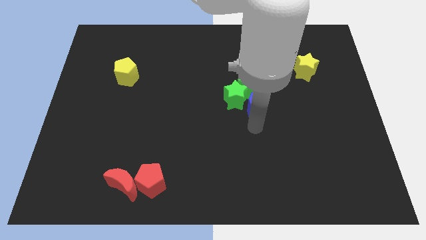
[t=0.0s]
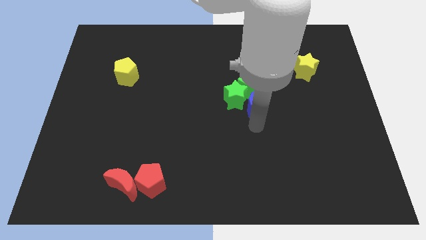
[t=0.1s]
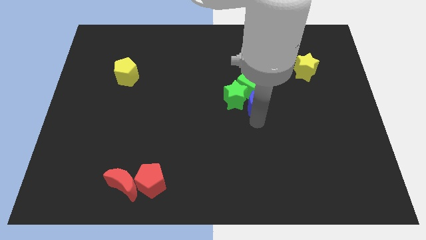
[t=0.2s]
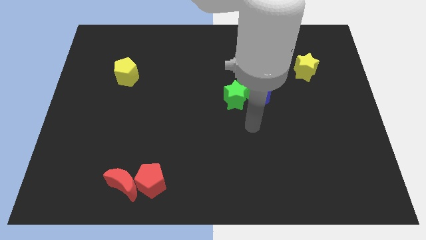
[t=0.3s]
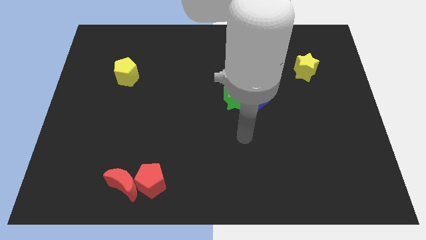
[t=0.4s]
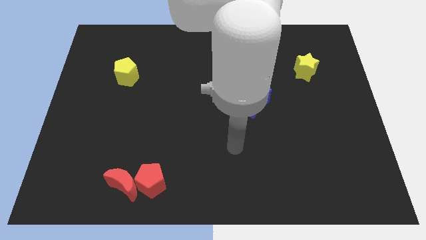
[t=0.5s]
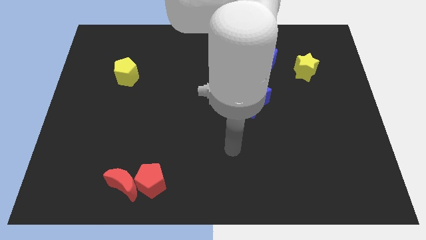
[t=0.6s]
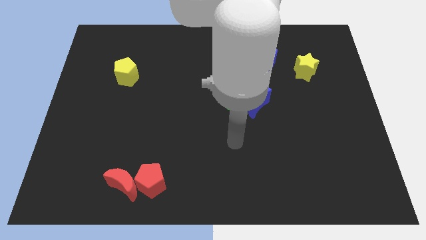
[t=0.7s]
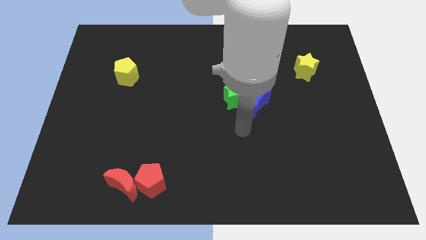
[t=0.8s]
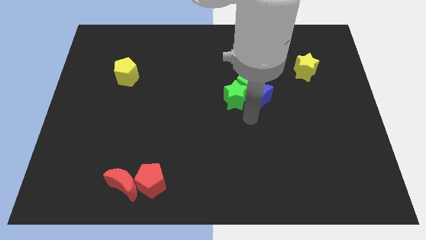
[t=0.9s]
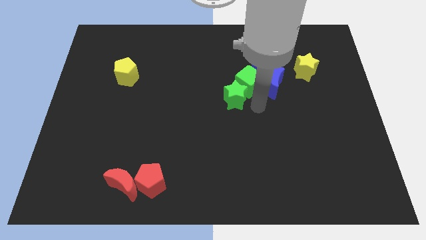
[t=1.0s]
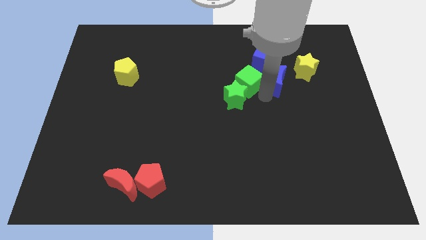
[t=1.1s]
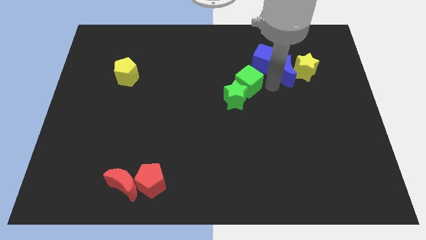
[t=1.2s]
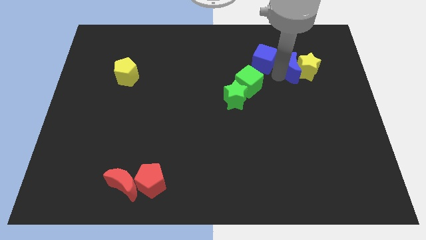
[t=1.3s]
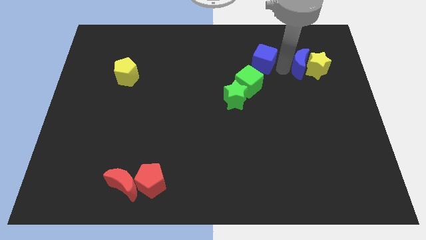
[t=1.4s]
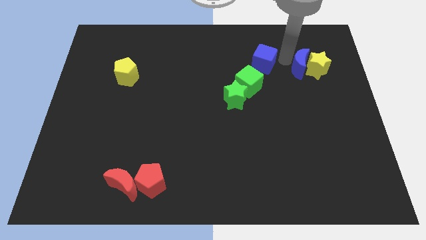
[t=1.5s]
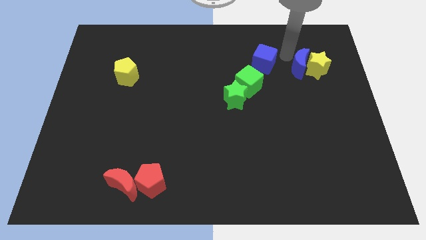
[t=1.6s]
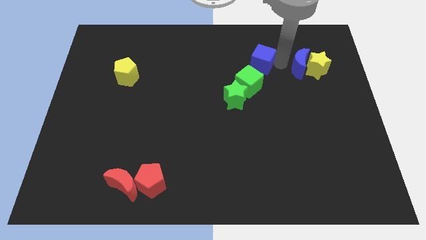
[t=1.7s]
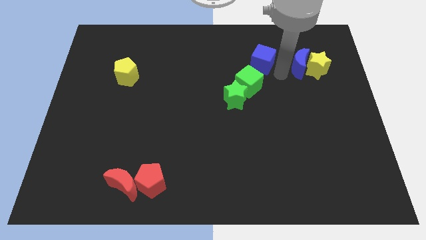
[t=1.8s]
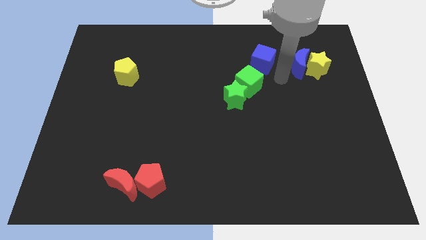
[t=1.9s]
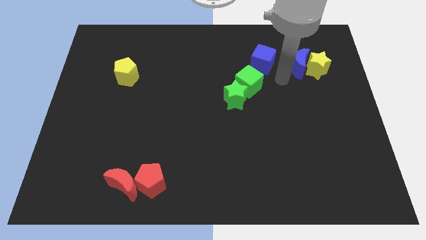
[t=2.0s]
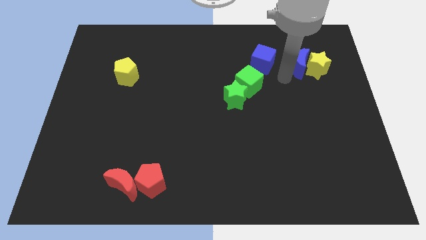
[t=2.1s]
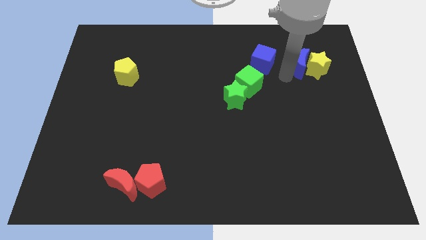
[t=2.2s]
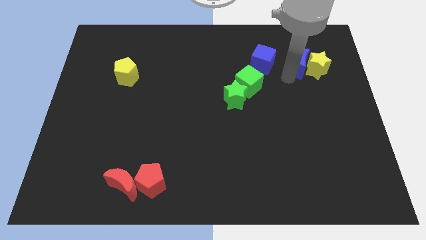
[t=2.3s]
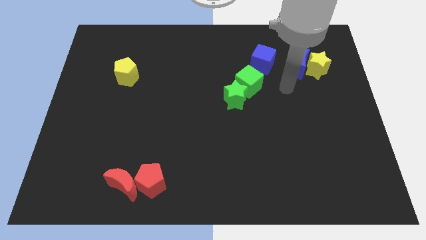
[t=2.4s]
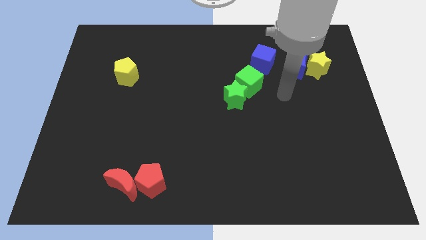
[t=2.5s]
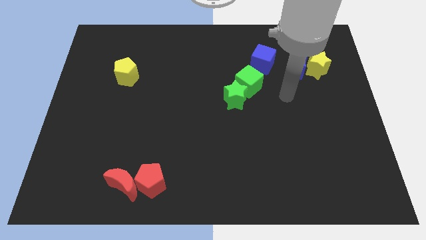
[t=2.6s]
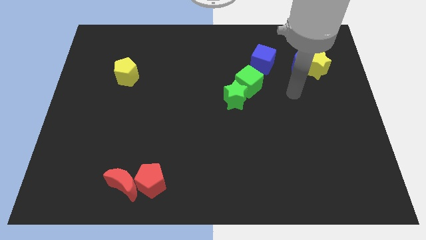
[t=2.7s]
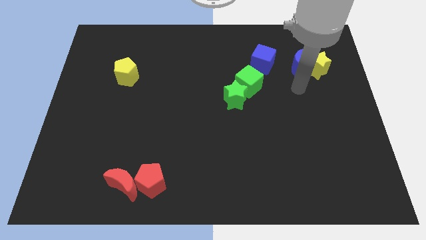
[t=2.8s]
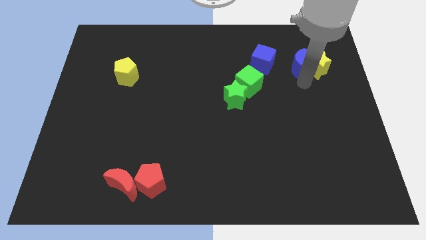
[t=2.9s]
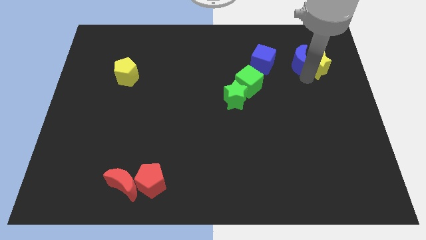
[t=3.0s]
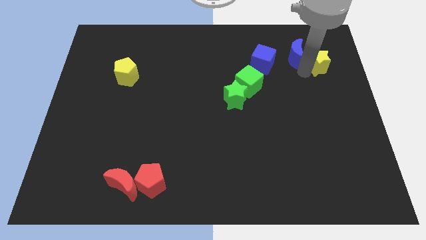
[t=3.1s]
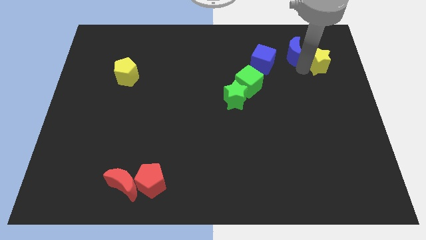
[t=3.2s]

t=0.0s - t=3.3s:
push the blue moon into the yellow star

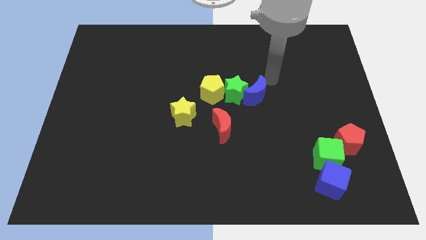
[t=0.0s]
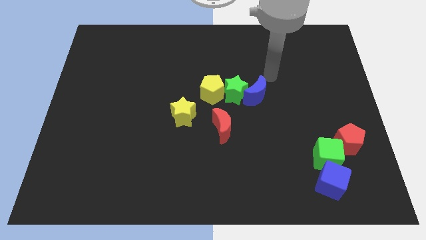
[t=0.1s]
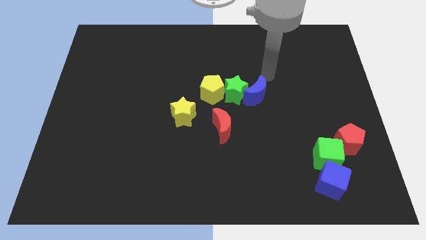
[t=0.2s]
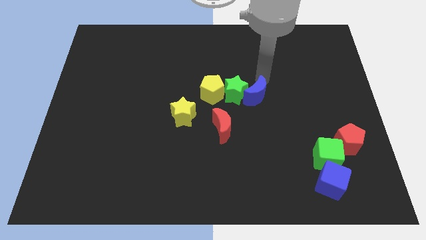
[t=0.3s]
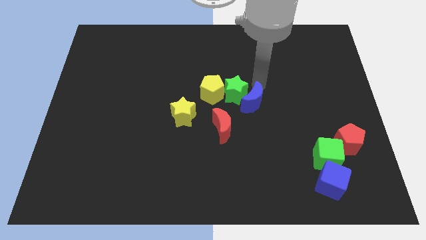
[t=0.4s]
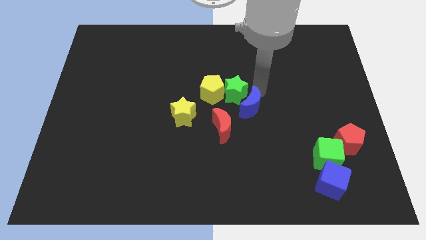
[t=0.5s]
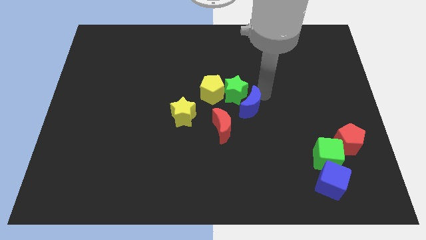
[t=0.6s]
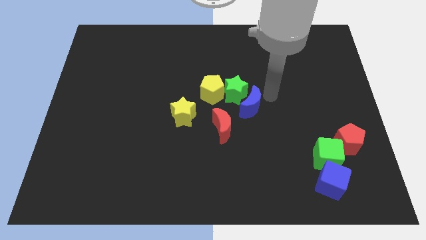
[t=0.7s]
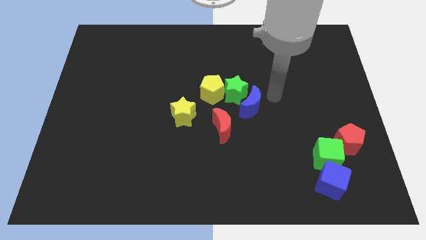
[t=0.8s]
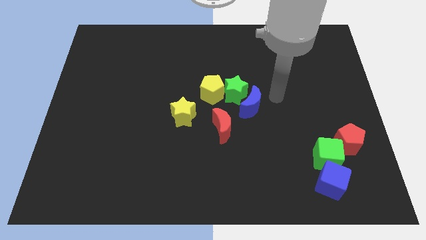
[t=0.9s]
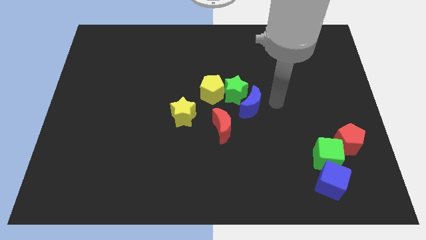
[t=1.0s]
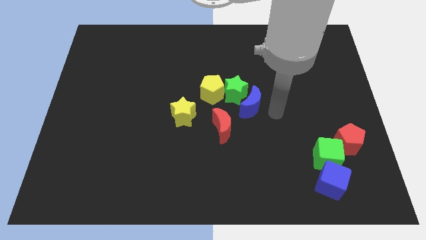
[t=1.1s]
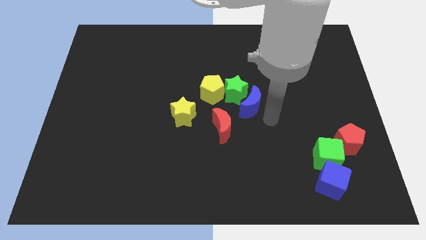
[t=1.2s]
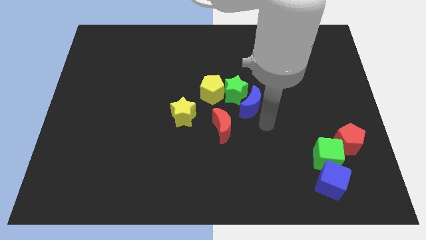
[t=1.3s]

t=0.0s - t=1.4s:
slightly move the blue crescent to the bottom of the board

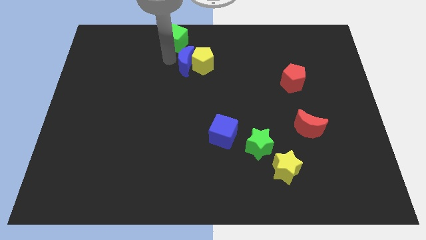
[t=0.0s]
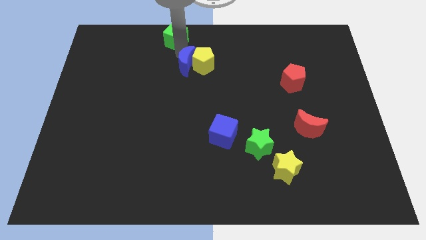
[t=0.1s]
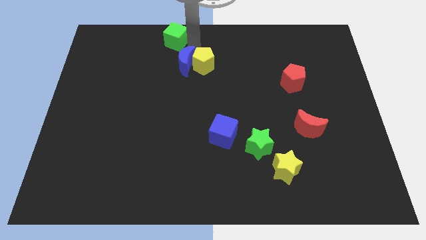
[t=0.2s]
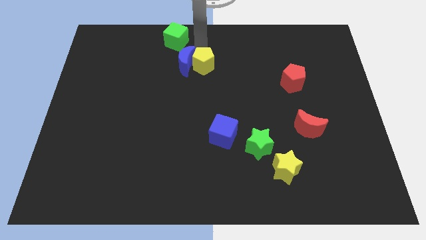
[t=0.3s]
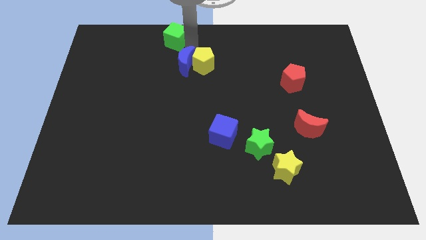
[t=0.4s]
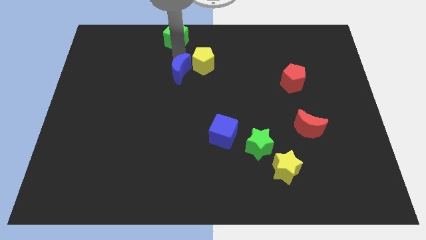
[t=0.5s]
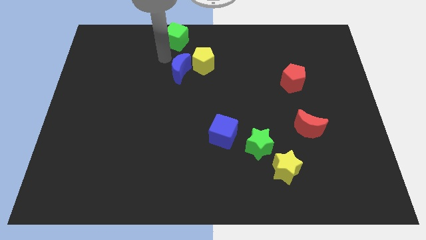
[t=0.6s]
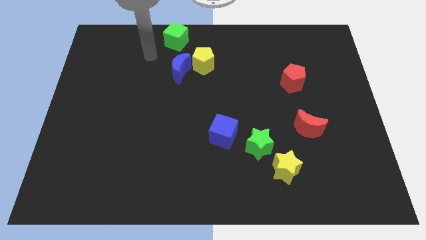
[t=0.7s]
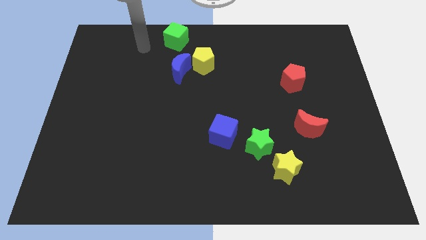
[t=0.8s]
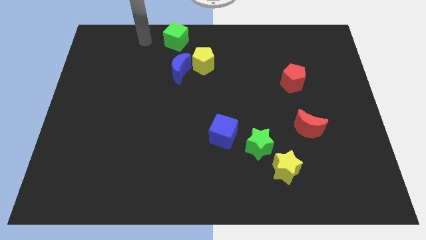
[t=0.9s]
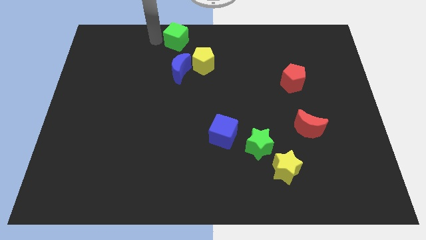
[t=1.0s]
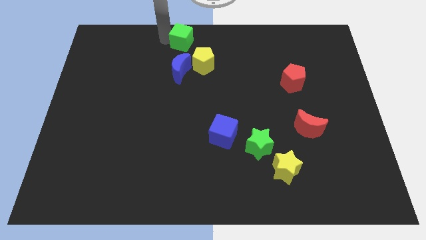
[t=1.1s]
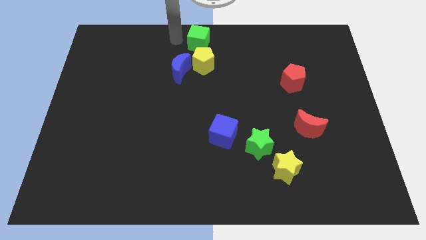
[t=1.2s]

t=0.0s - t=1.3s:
place the green cube on the top of yellow pentagon

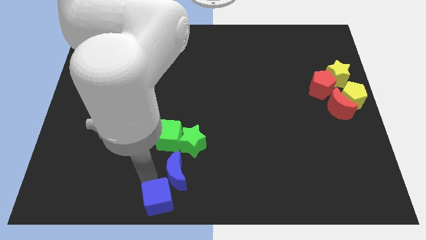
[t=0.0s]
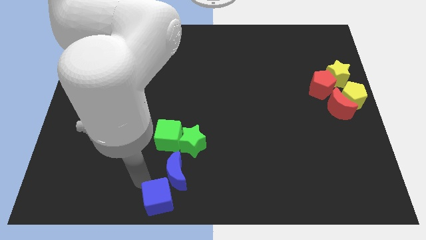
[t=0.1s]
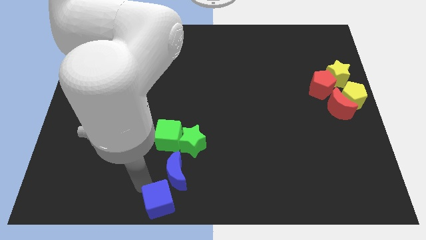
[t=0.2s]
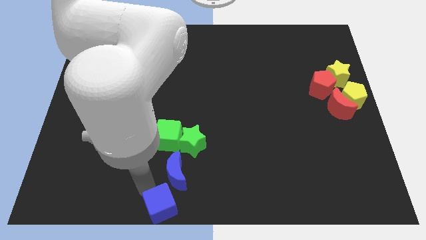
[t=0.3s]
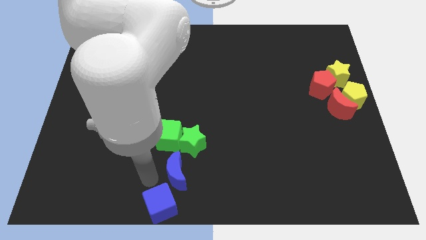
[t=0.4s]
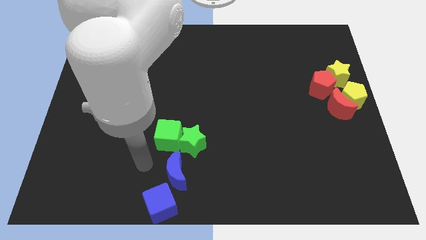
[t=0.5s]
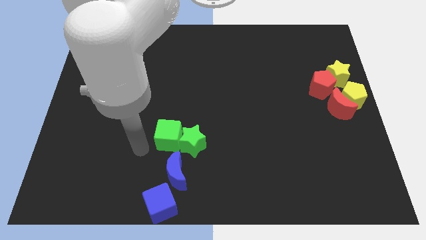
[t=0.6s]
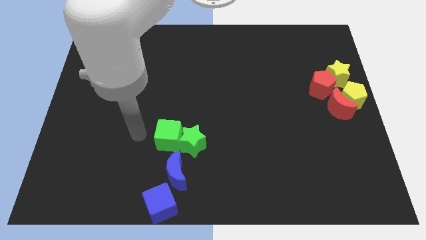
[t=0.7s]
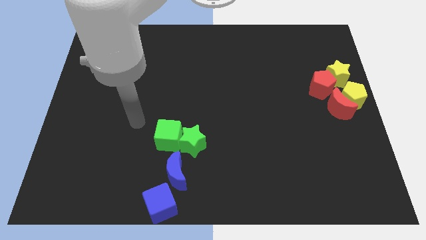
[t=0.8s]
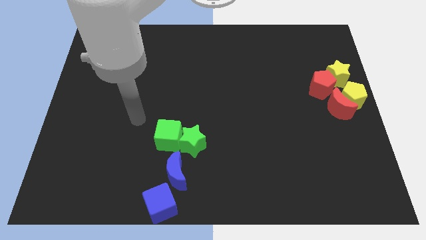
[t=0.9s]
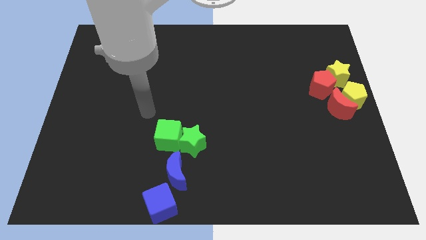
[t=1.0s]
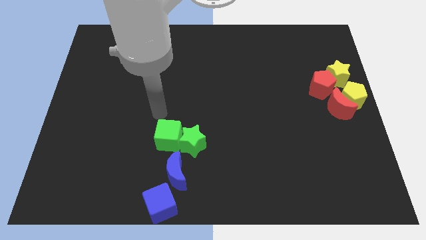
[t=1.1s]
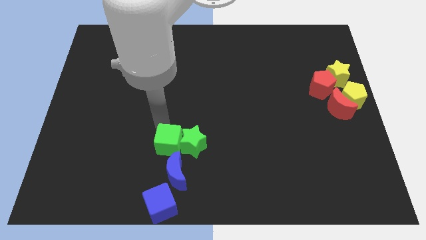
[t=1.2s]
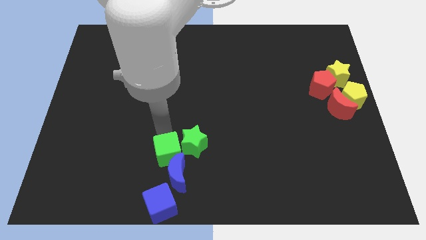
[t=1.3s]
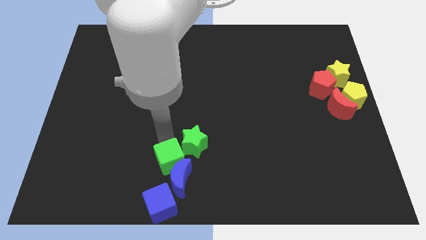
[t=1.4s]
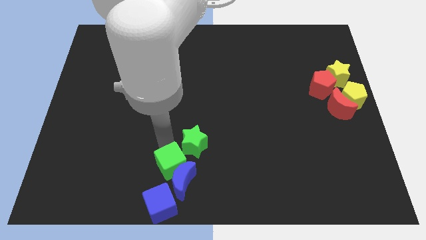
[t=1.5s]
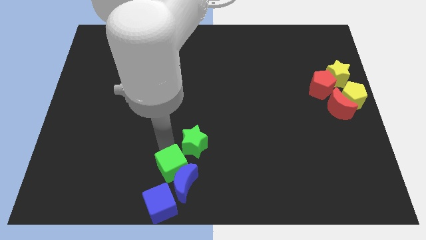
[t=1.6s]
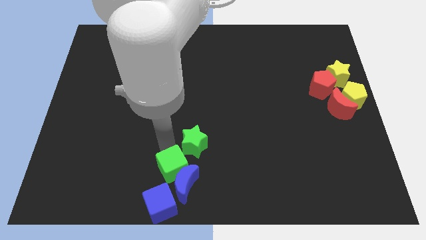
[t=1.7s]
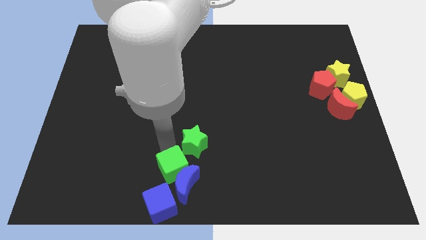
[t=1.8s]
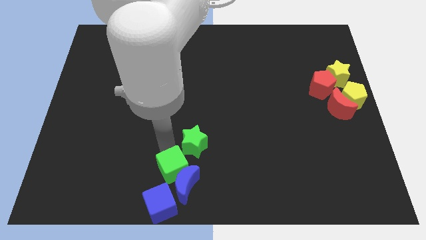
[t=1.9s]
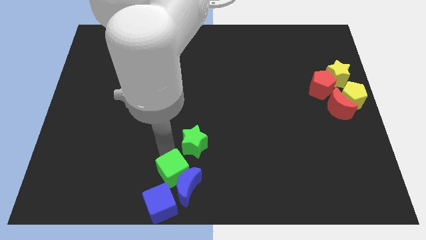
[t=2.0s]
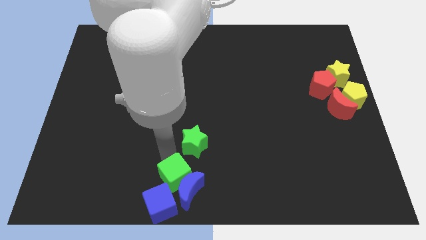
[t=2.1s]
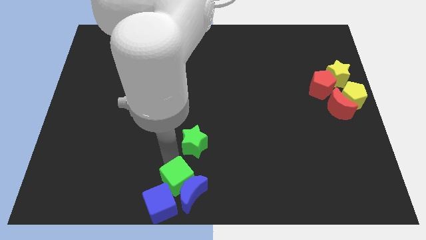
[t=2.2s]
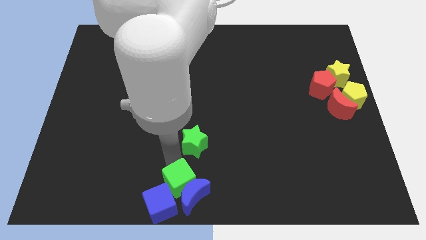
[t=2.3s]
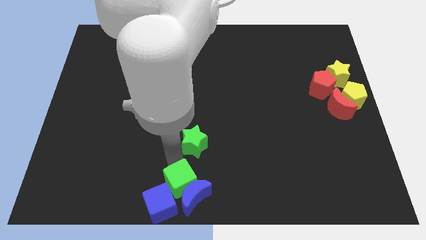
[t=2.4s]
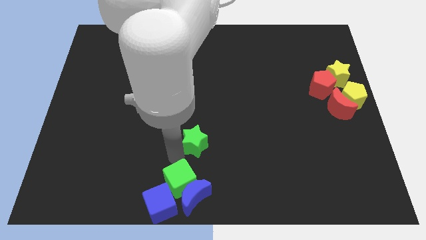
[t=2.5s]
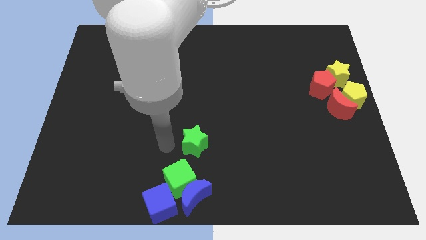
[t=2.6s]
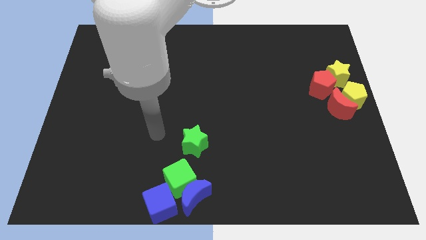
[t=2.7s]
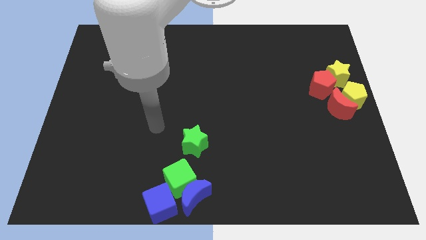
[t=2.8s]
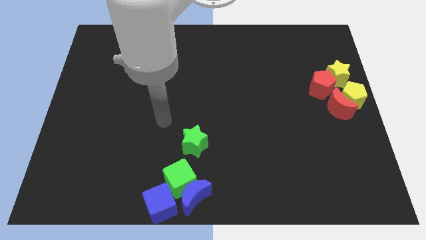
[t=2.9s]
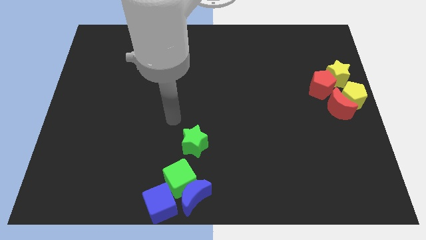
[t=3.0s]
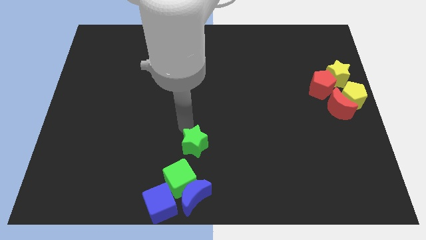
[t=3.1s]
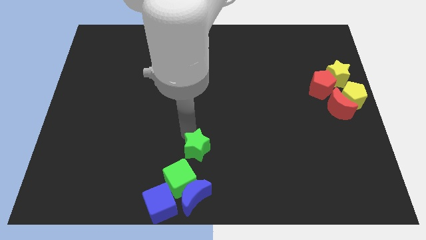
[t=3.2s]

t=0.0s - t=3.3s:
push the green cube into the blue moon
